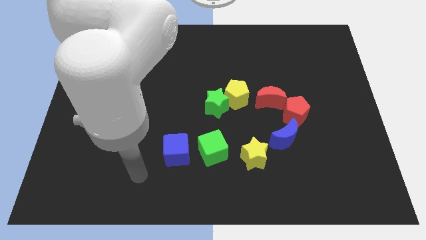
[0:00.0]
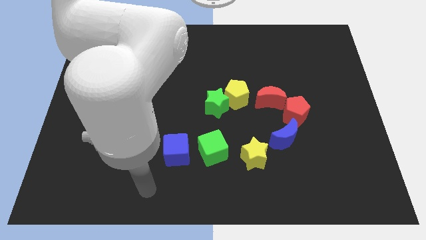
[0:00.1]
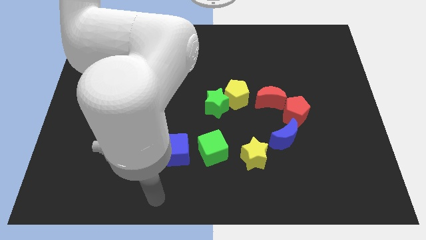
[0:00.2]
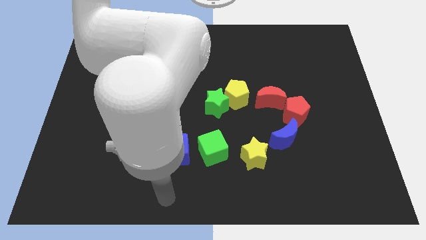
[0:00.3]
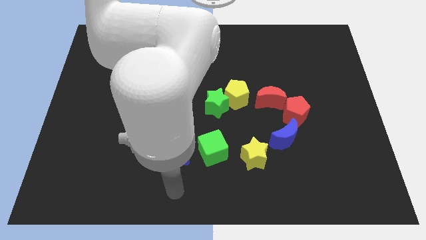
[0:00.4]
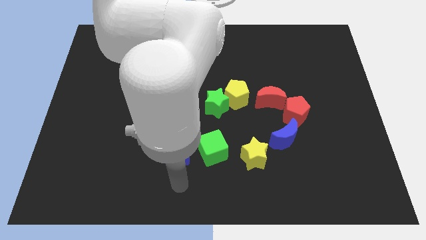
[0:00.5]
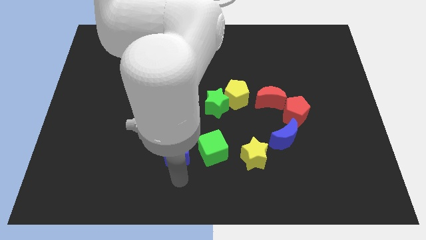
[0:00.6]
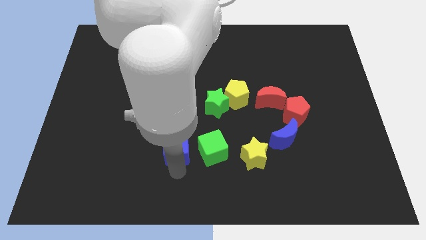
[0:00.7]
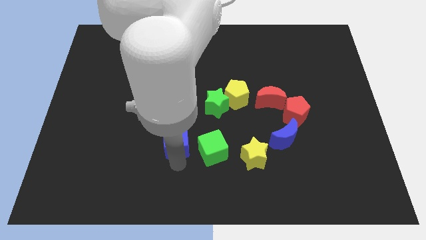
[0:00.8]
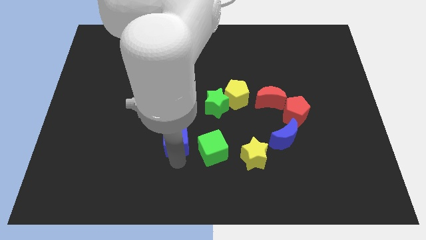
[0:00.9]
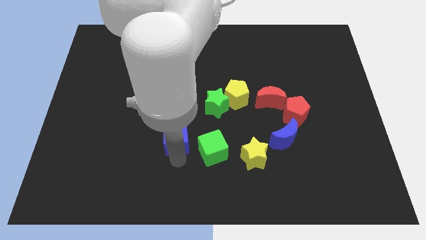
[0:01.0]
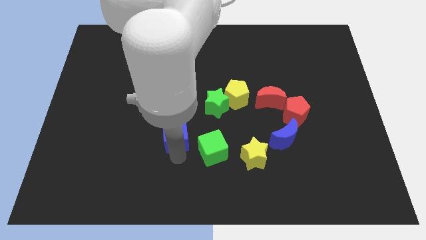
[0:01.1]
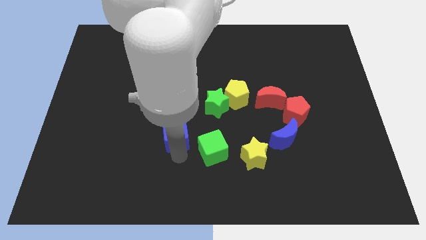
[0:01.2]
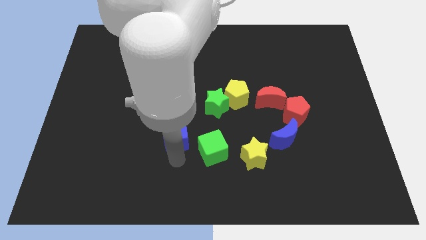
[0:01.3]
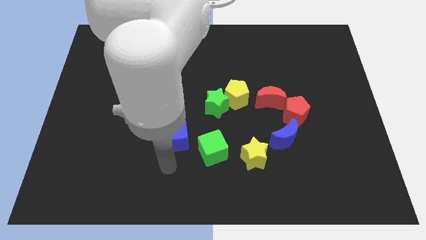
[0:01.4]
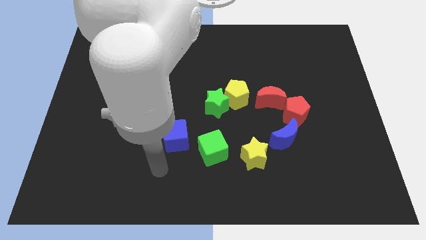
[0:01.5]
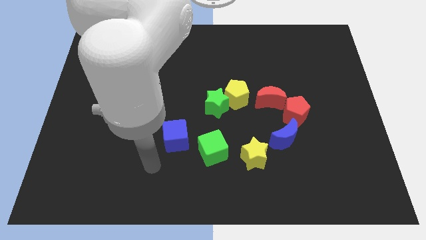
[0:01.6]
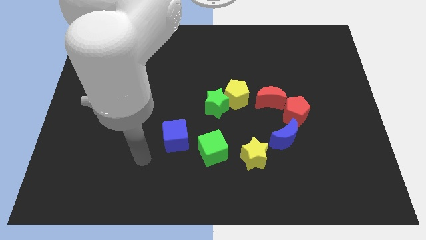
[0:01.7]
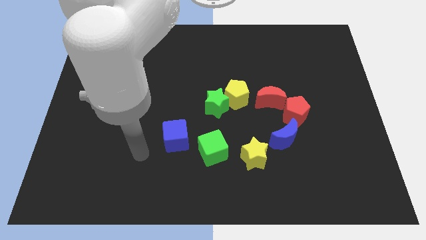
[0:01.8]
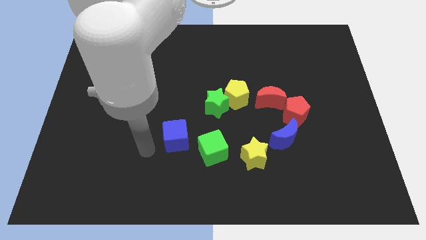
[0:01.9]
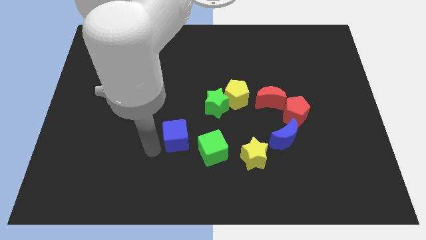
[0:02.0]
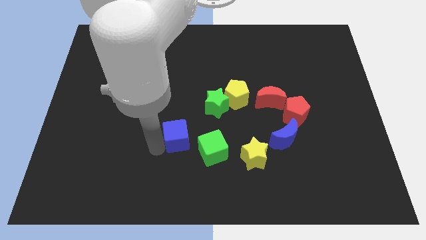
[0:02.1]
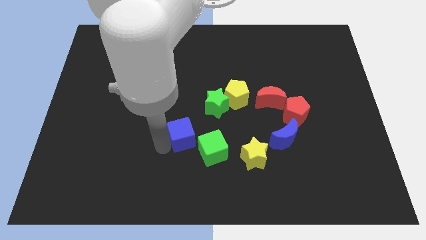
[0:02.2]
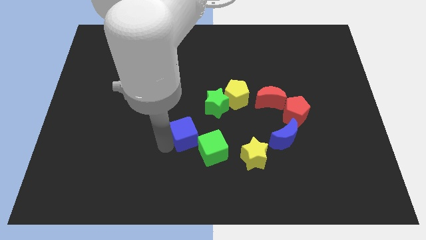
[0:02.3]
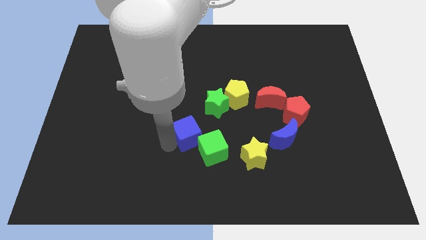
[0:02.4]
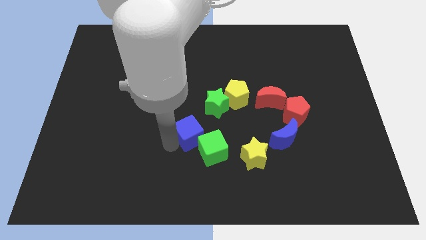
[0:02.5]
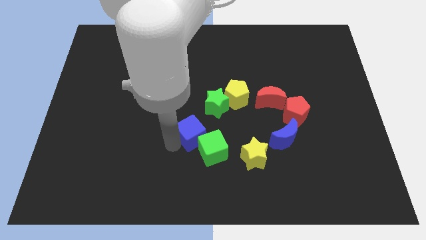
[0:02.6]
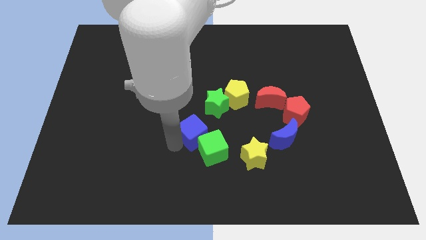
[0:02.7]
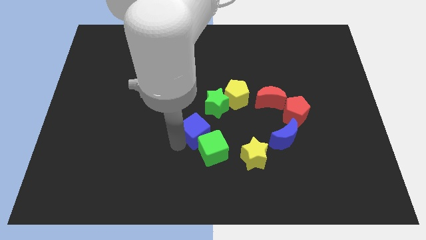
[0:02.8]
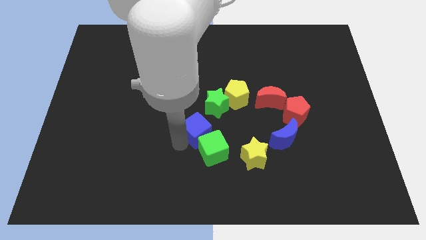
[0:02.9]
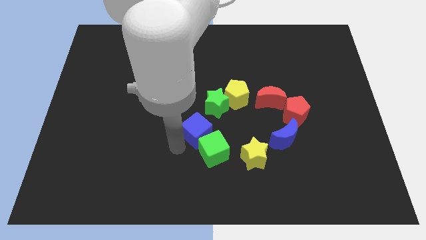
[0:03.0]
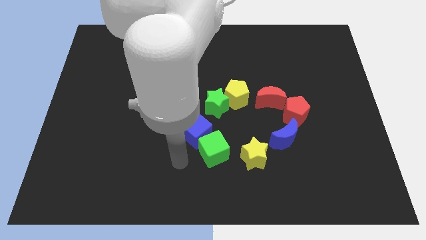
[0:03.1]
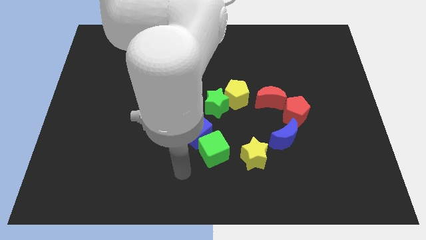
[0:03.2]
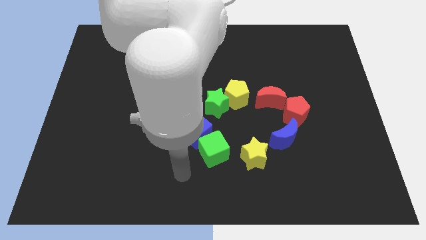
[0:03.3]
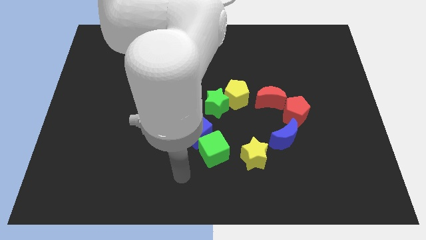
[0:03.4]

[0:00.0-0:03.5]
push the blue cube to the top of the green cube

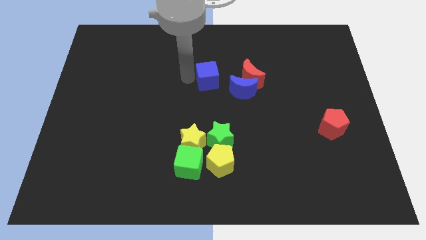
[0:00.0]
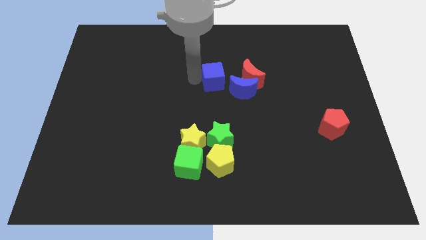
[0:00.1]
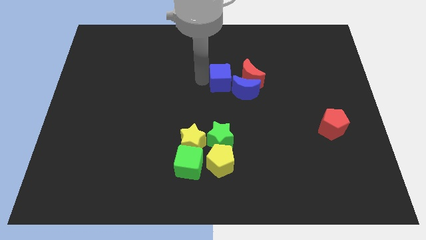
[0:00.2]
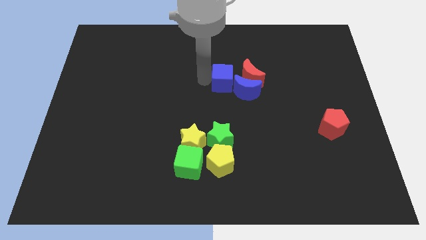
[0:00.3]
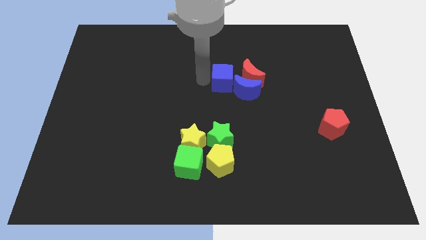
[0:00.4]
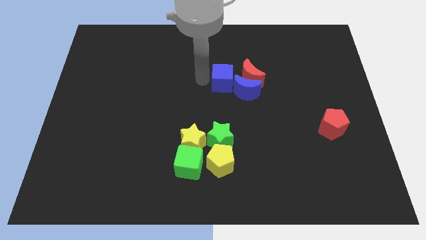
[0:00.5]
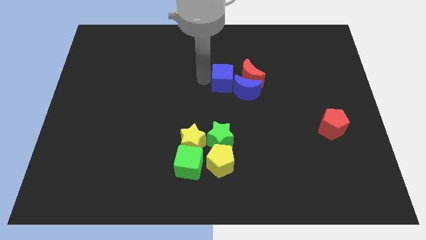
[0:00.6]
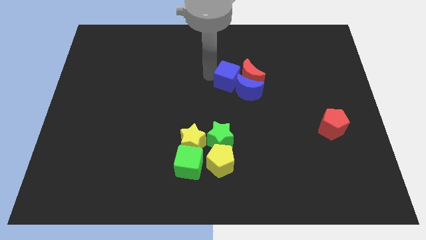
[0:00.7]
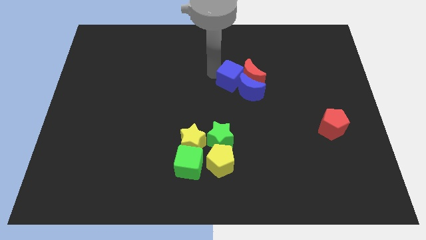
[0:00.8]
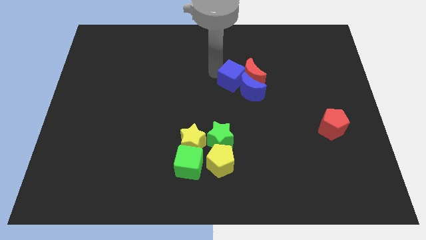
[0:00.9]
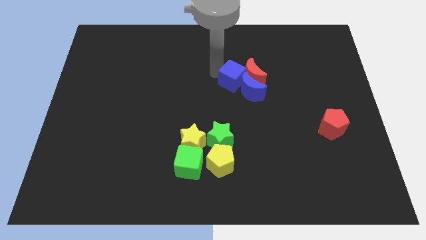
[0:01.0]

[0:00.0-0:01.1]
push the blue cube into the blue and red crescent from the left

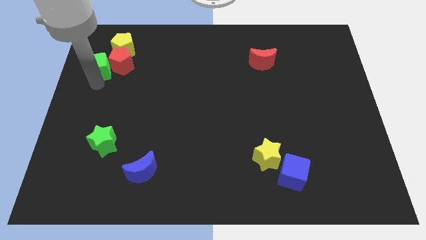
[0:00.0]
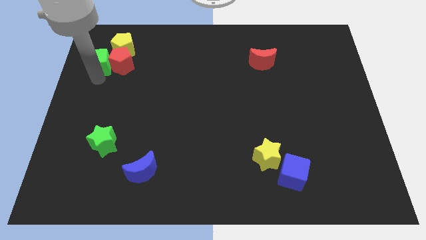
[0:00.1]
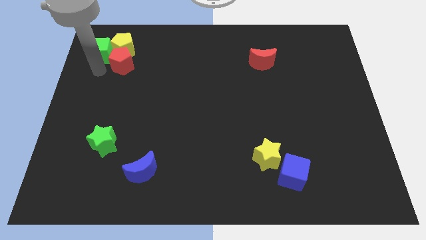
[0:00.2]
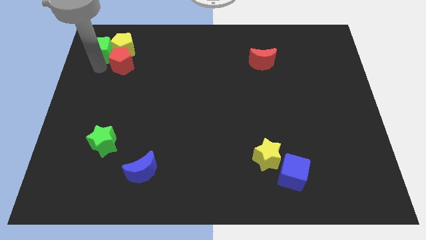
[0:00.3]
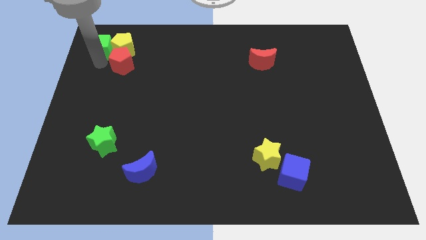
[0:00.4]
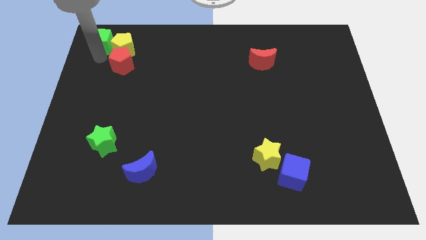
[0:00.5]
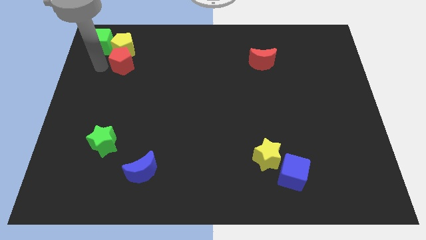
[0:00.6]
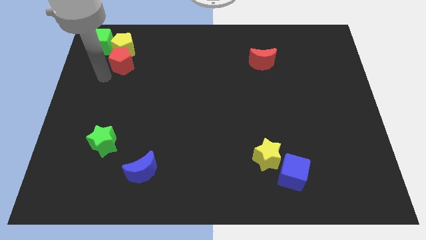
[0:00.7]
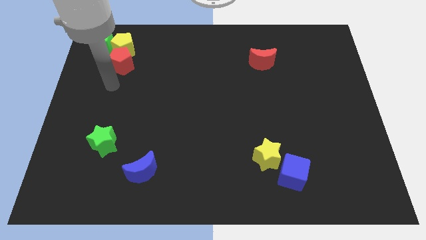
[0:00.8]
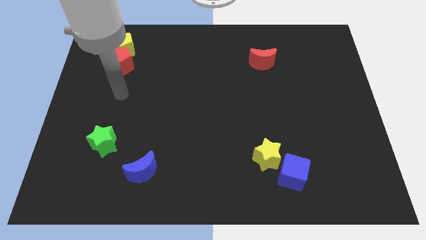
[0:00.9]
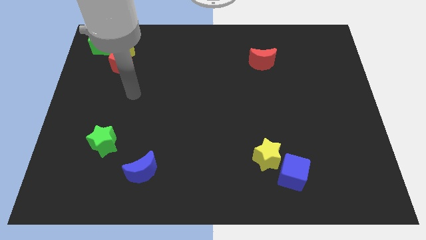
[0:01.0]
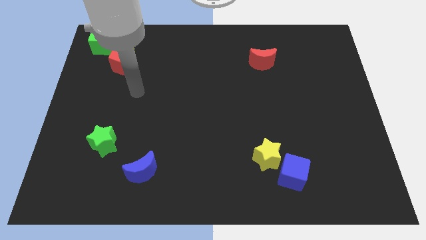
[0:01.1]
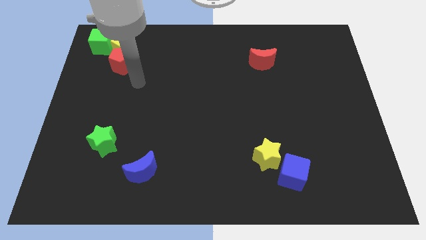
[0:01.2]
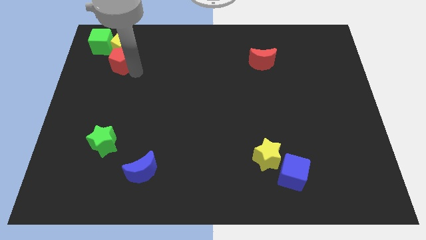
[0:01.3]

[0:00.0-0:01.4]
move the green cube left to the yellow pentagon

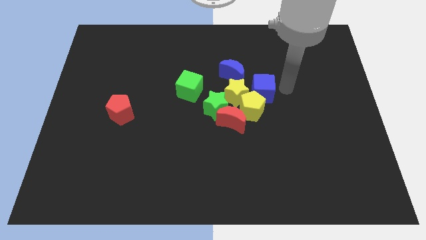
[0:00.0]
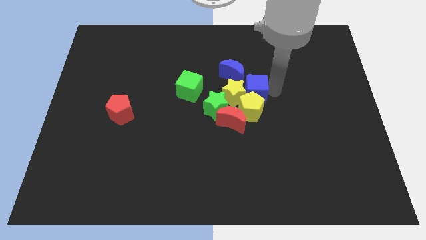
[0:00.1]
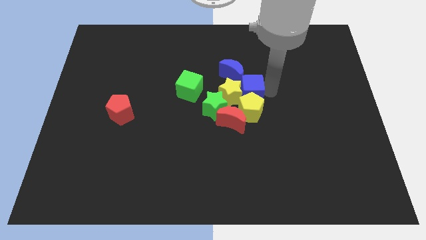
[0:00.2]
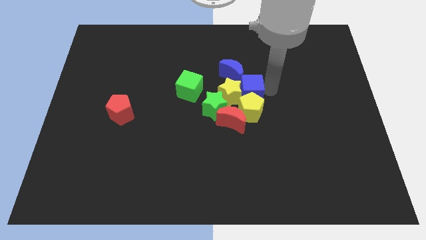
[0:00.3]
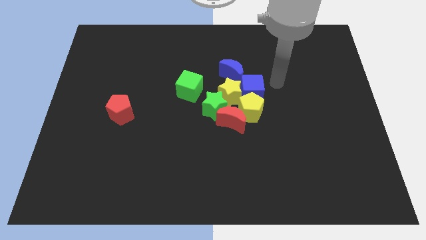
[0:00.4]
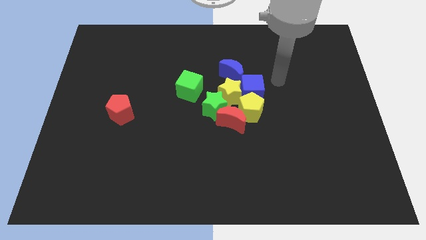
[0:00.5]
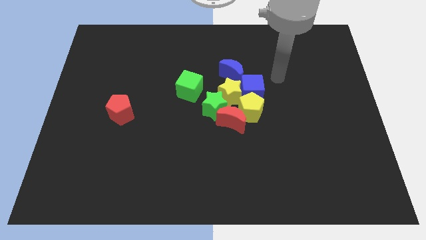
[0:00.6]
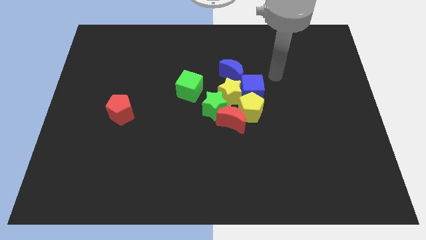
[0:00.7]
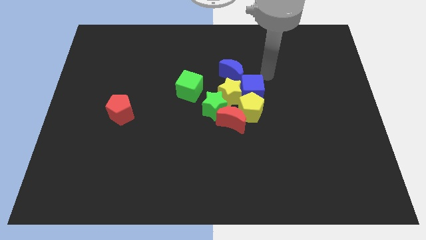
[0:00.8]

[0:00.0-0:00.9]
move the blue cube into yellow blocks

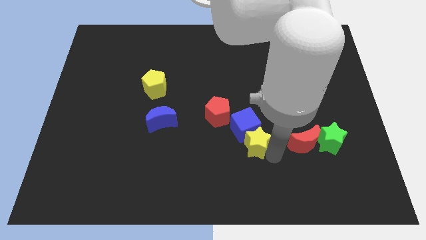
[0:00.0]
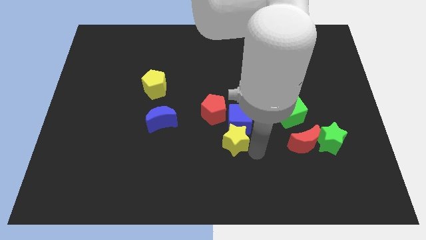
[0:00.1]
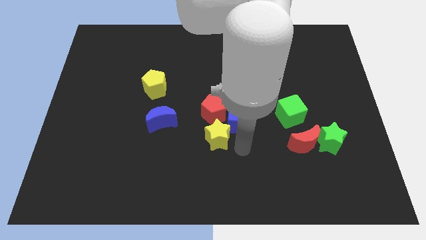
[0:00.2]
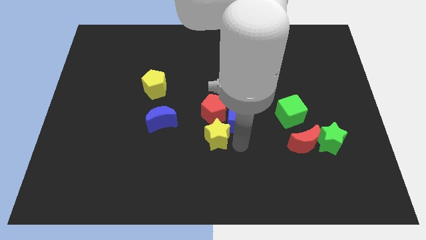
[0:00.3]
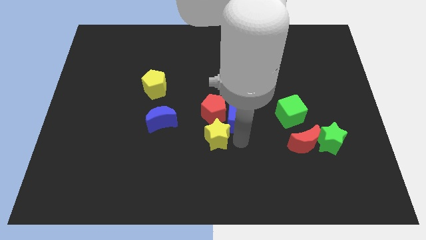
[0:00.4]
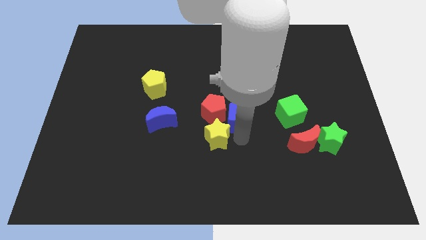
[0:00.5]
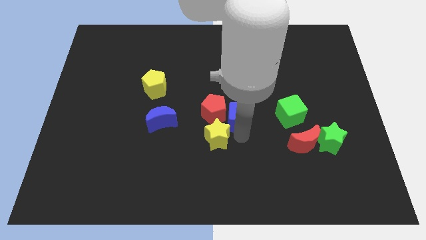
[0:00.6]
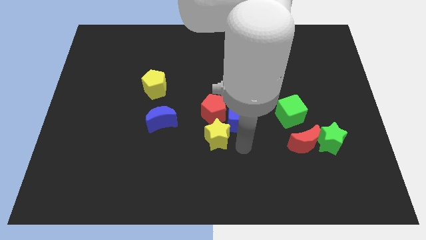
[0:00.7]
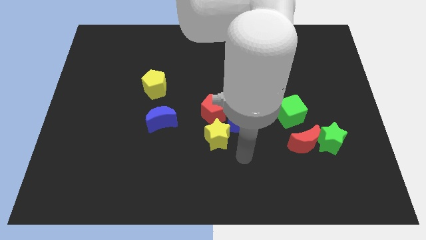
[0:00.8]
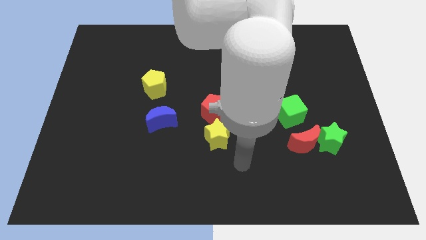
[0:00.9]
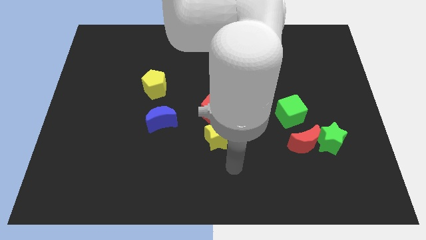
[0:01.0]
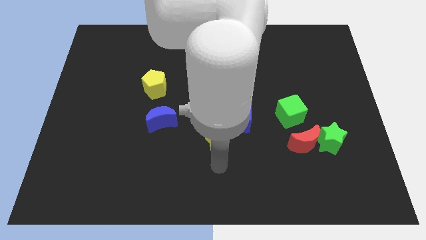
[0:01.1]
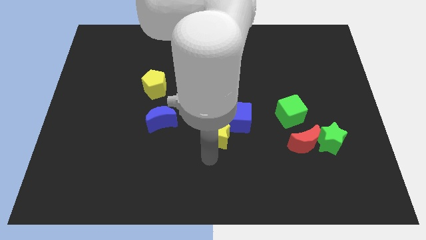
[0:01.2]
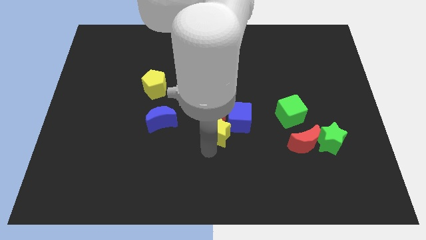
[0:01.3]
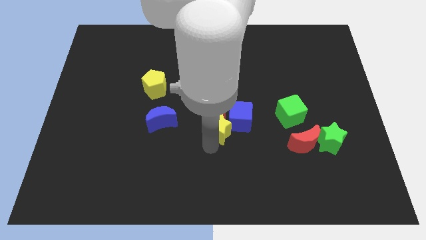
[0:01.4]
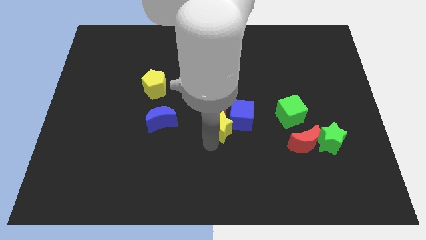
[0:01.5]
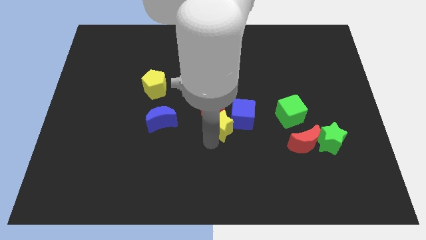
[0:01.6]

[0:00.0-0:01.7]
make a group of yellow stared pentagon and blue cube

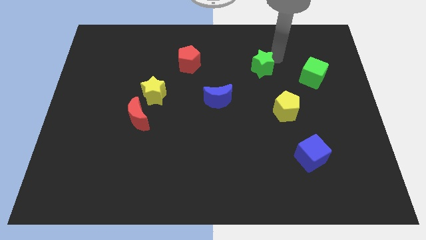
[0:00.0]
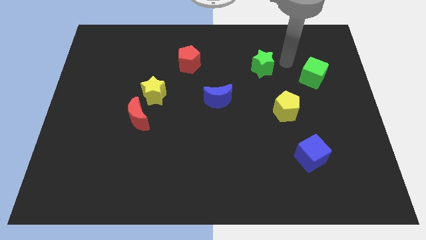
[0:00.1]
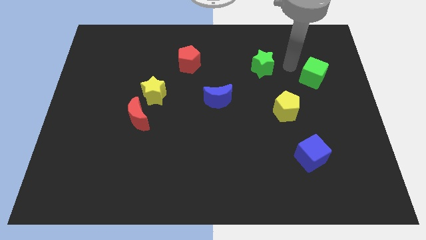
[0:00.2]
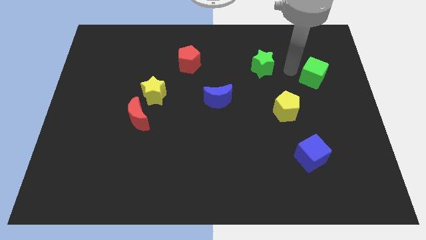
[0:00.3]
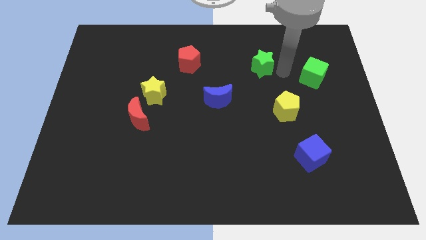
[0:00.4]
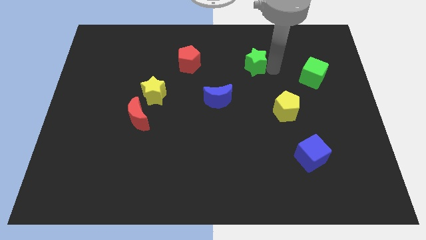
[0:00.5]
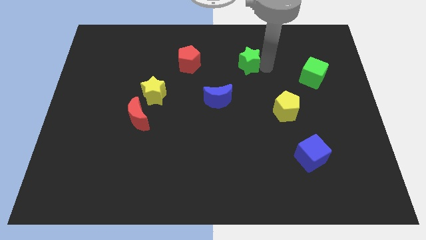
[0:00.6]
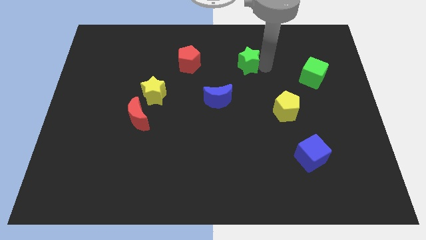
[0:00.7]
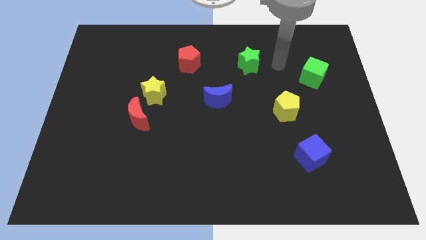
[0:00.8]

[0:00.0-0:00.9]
place green star towards the red pentagon
